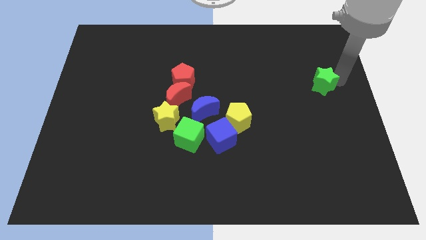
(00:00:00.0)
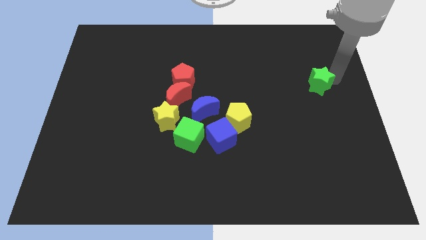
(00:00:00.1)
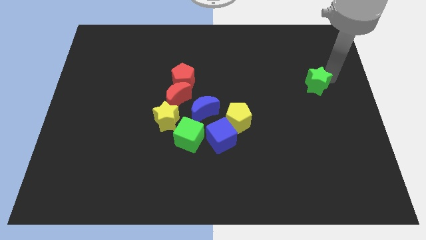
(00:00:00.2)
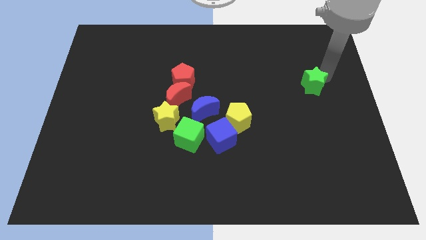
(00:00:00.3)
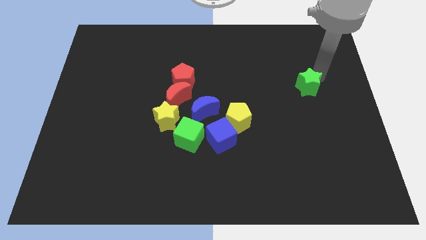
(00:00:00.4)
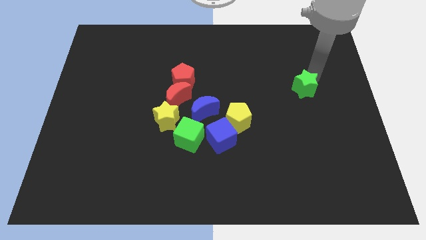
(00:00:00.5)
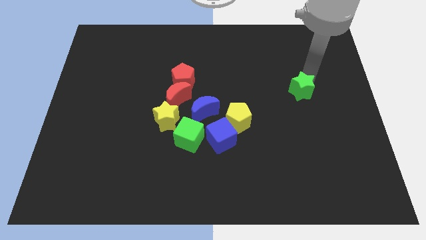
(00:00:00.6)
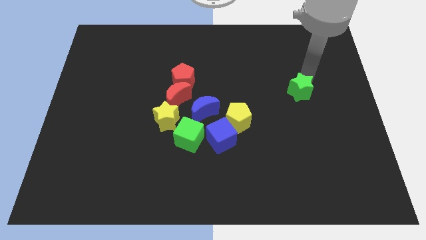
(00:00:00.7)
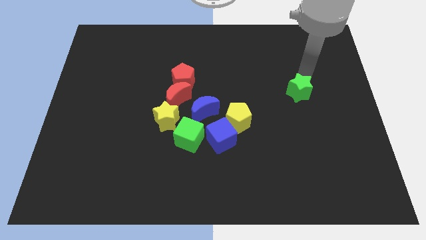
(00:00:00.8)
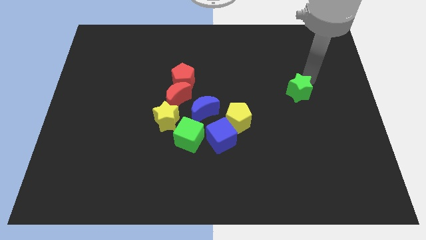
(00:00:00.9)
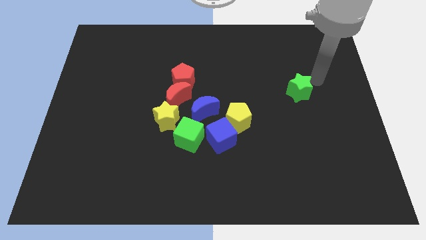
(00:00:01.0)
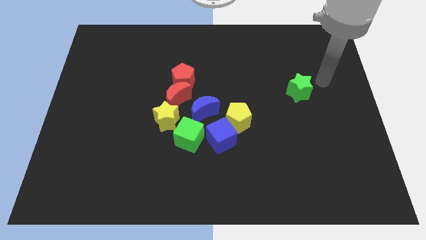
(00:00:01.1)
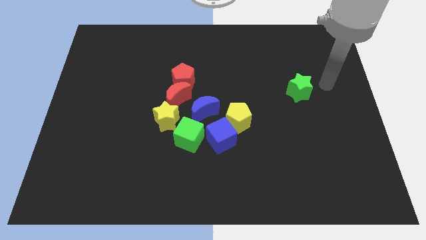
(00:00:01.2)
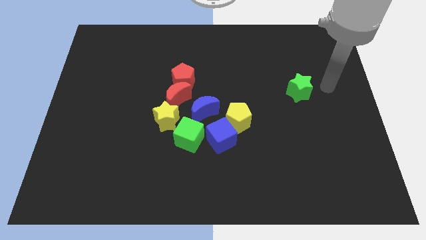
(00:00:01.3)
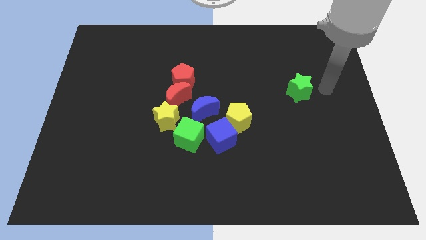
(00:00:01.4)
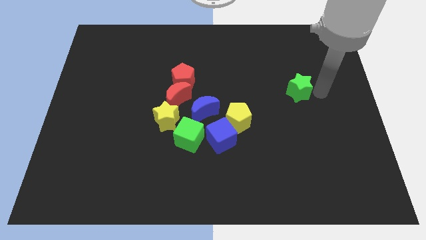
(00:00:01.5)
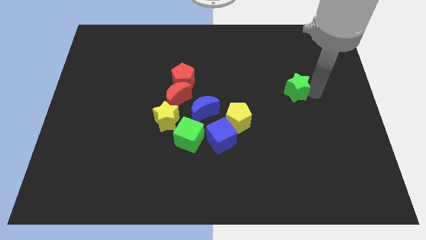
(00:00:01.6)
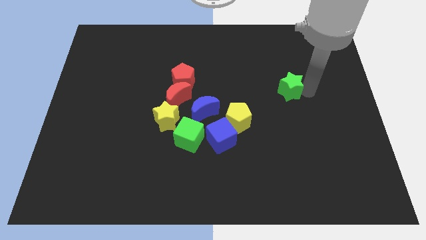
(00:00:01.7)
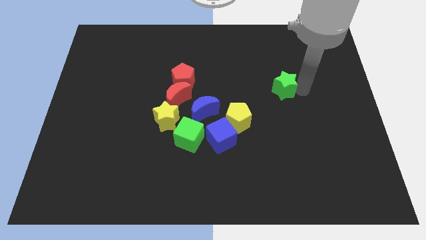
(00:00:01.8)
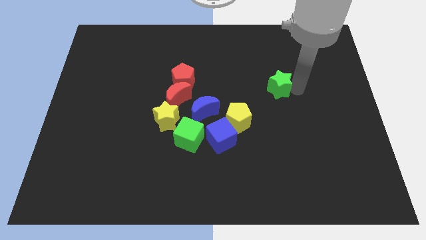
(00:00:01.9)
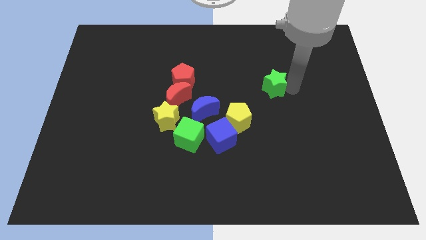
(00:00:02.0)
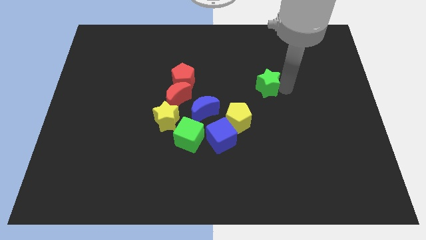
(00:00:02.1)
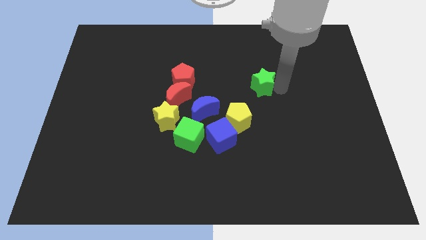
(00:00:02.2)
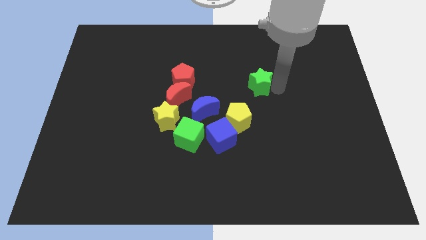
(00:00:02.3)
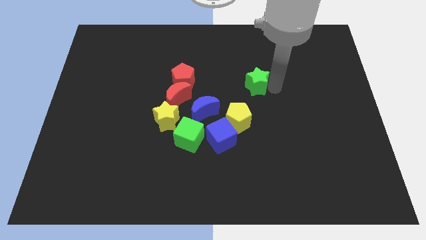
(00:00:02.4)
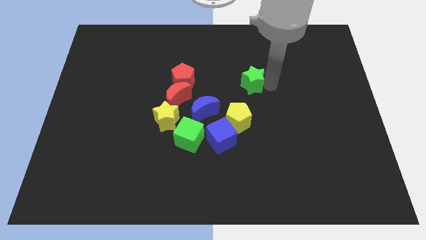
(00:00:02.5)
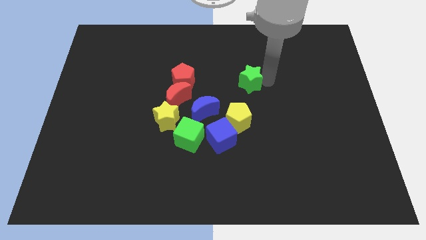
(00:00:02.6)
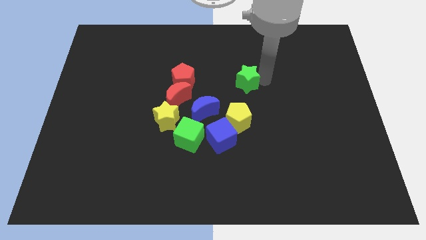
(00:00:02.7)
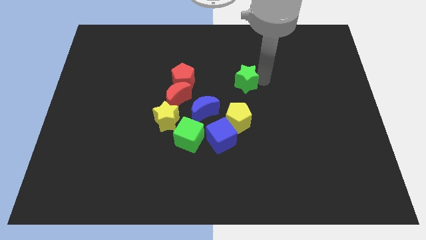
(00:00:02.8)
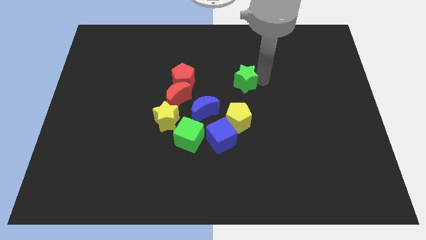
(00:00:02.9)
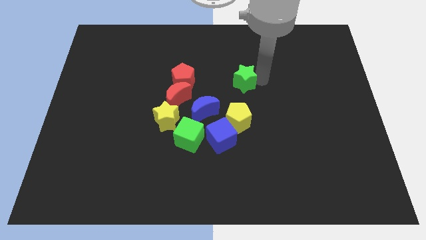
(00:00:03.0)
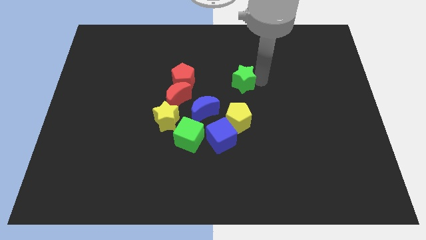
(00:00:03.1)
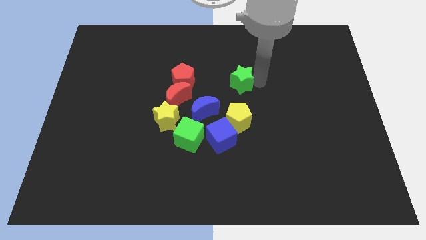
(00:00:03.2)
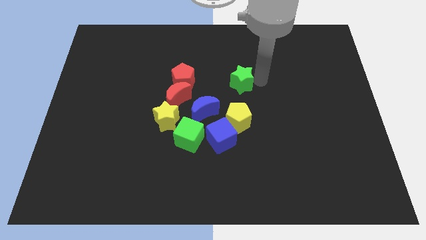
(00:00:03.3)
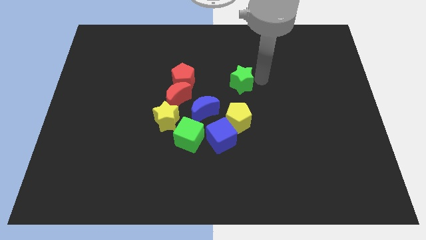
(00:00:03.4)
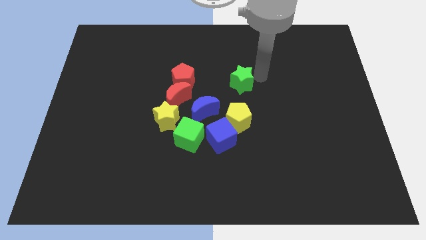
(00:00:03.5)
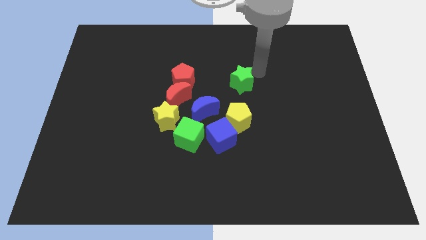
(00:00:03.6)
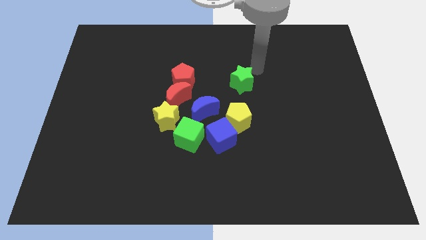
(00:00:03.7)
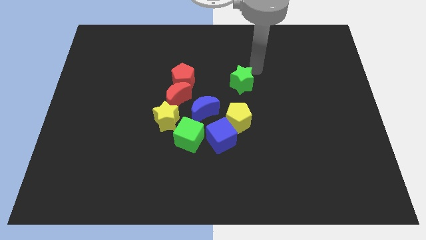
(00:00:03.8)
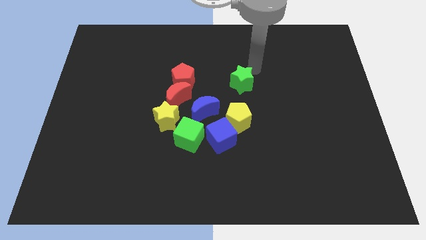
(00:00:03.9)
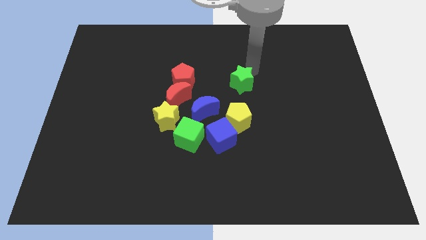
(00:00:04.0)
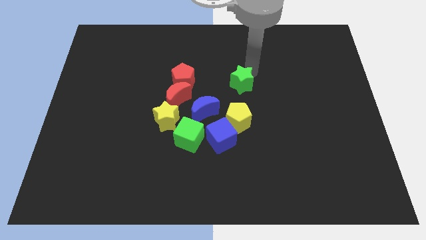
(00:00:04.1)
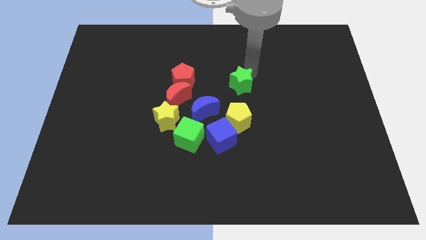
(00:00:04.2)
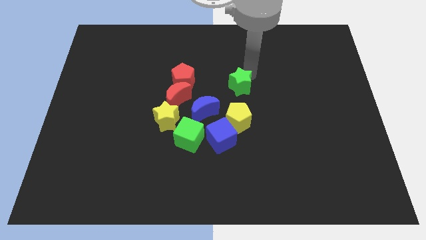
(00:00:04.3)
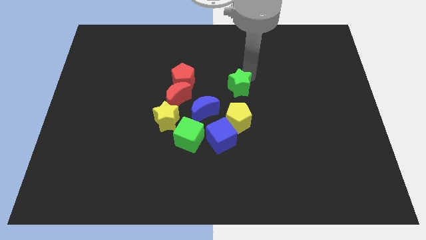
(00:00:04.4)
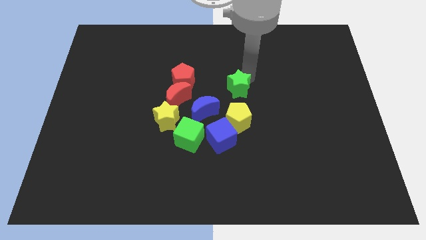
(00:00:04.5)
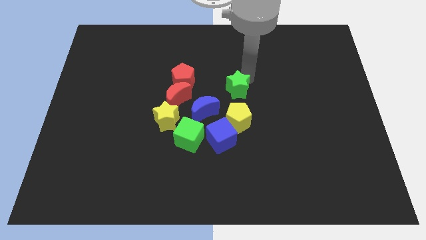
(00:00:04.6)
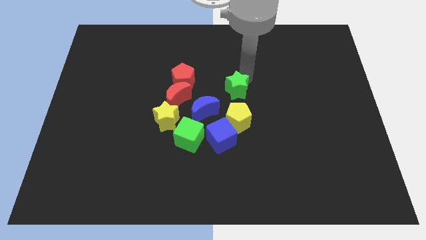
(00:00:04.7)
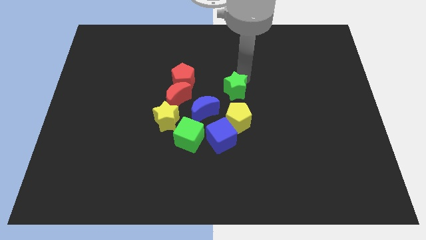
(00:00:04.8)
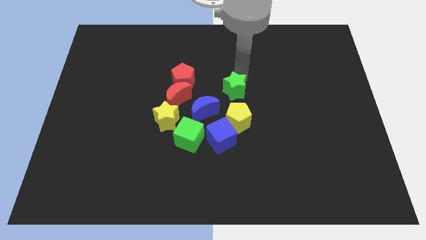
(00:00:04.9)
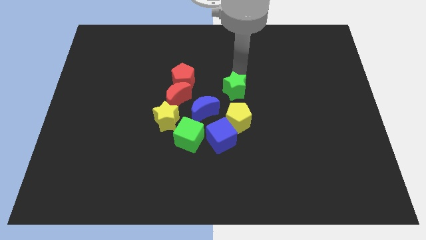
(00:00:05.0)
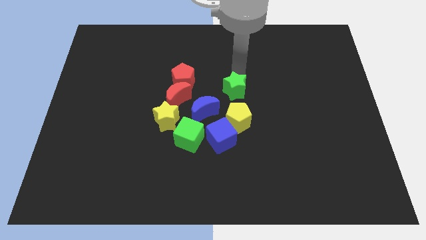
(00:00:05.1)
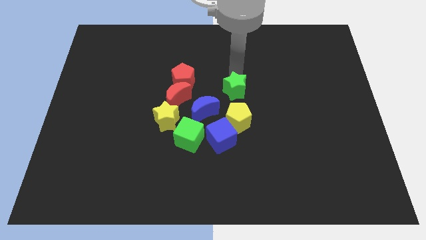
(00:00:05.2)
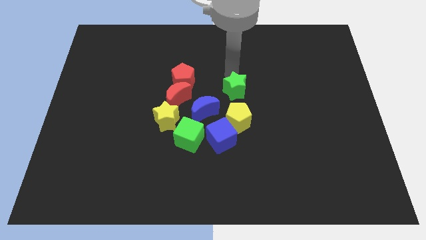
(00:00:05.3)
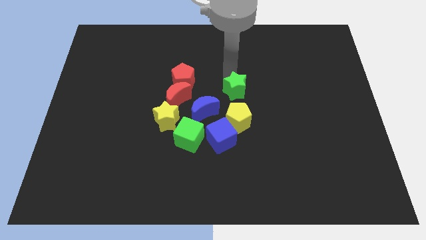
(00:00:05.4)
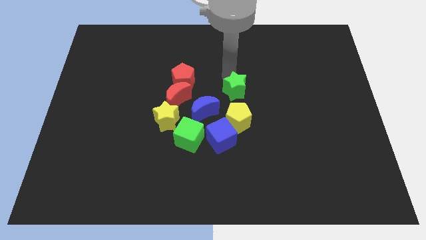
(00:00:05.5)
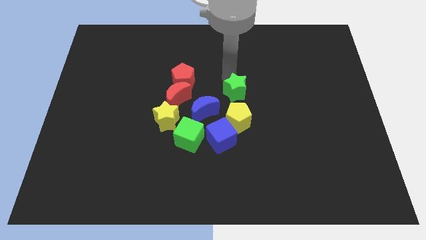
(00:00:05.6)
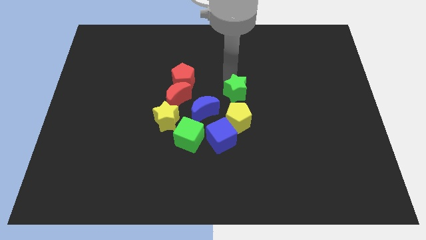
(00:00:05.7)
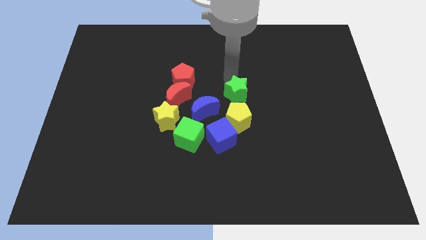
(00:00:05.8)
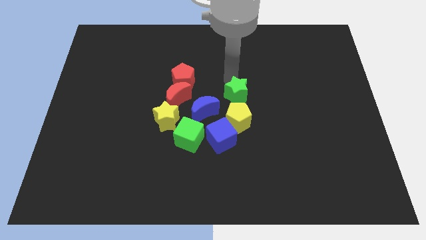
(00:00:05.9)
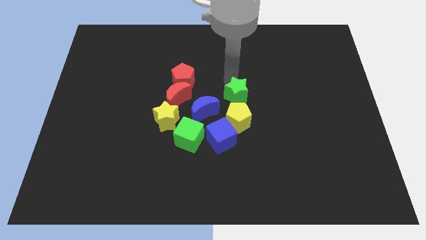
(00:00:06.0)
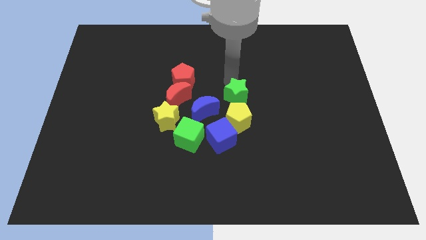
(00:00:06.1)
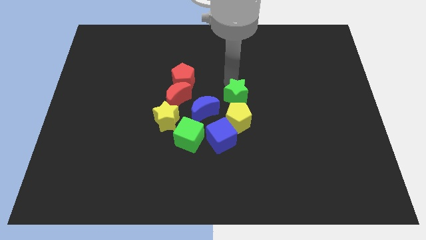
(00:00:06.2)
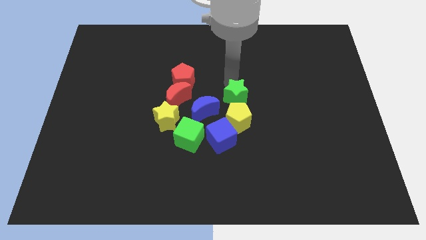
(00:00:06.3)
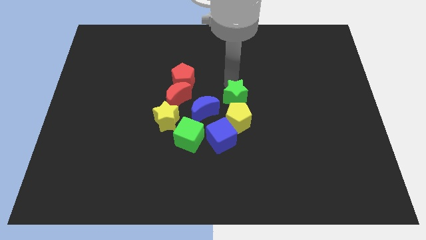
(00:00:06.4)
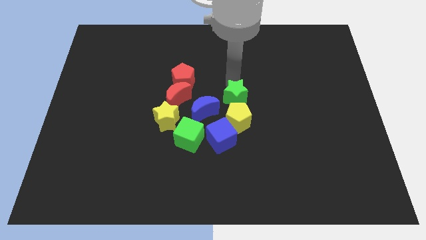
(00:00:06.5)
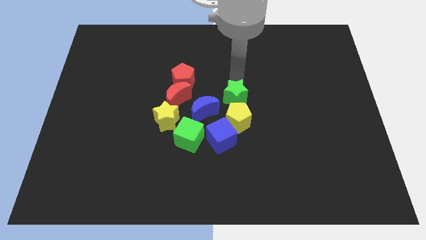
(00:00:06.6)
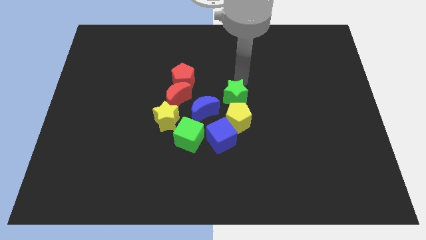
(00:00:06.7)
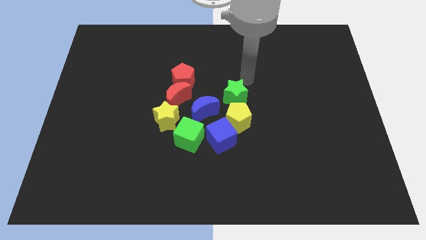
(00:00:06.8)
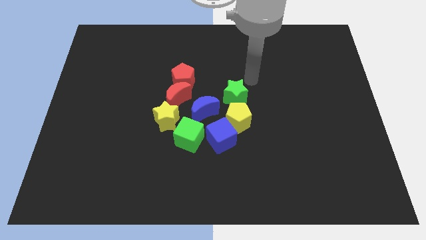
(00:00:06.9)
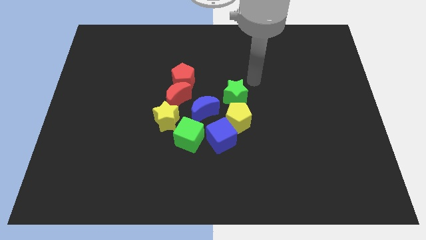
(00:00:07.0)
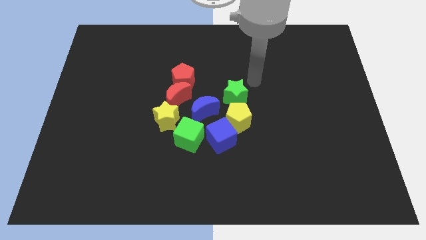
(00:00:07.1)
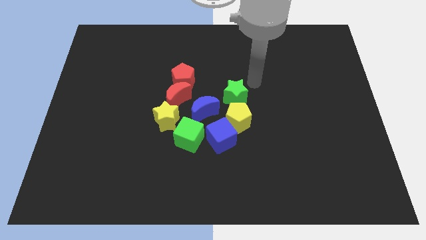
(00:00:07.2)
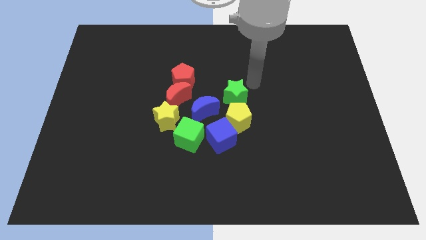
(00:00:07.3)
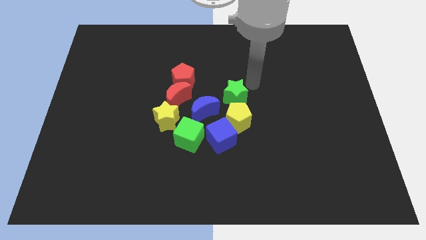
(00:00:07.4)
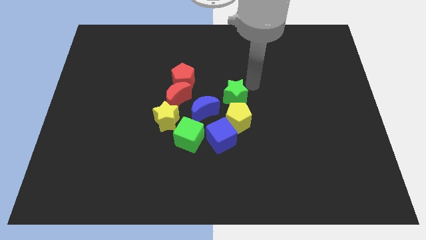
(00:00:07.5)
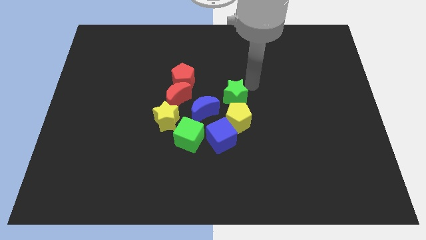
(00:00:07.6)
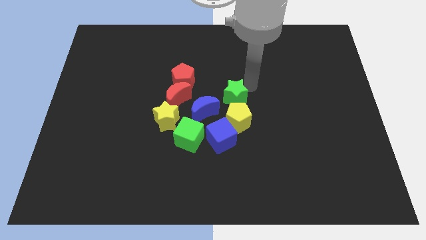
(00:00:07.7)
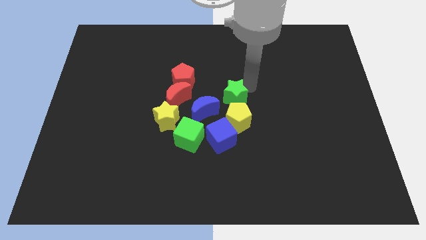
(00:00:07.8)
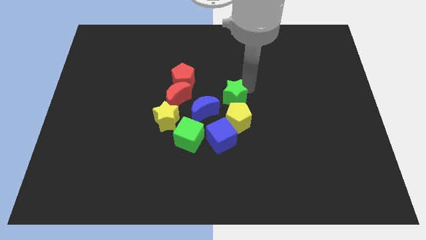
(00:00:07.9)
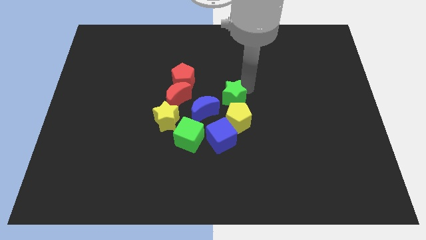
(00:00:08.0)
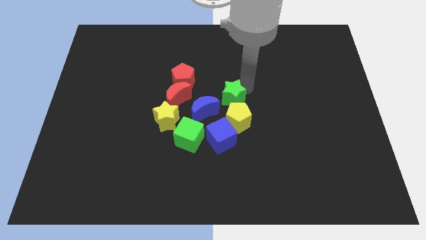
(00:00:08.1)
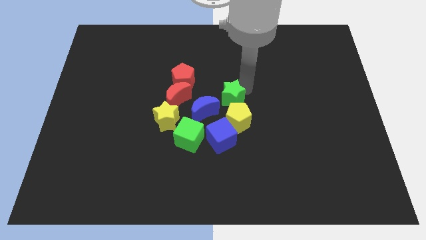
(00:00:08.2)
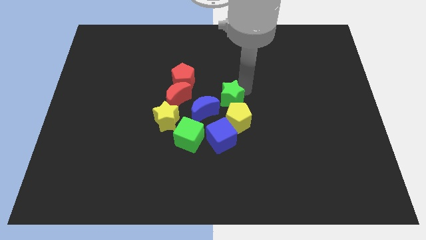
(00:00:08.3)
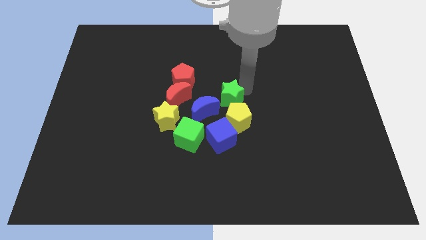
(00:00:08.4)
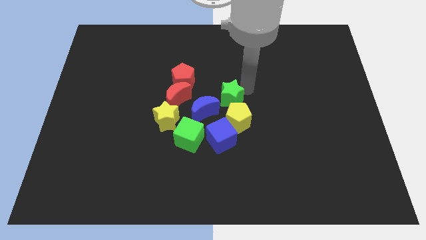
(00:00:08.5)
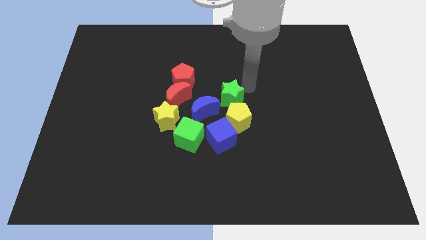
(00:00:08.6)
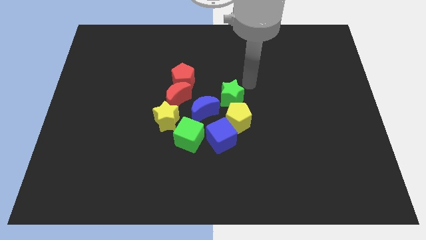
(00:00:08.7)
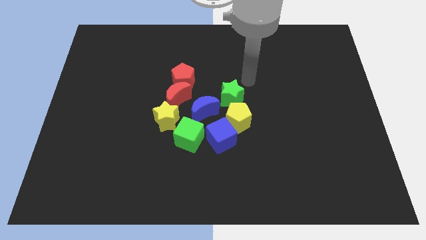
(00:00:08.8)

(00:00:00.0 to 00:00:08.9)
move the green star diagonally to the blue moon
